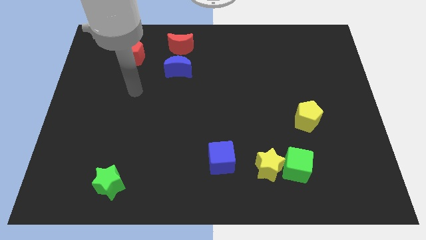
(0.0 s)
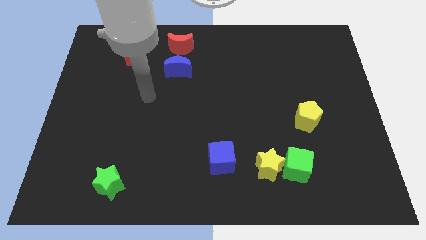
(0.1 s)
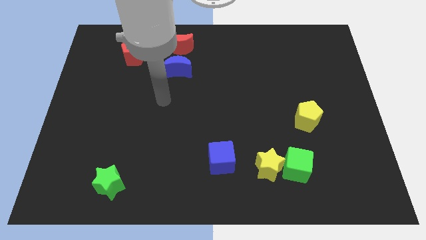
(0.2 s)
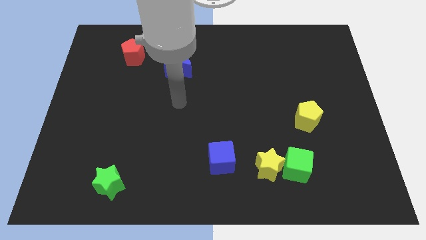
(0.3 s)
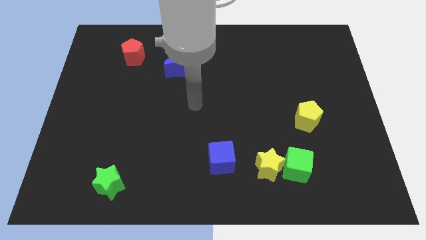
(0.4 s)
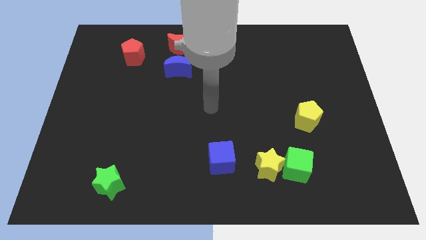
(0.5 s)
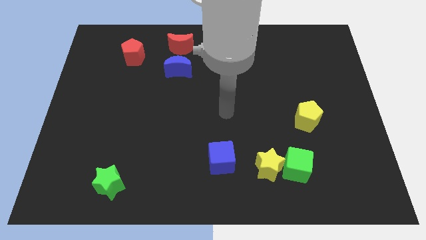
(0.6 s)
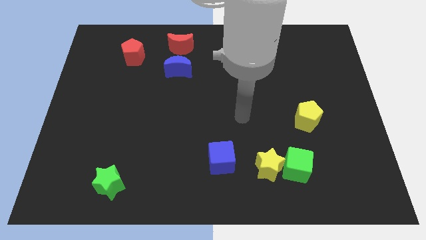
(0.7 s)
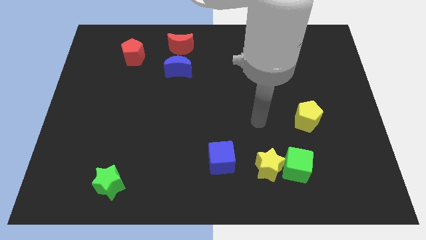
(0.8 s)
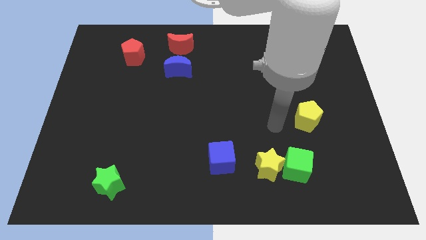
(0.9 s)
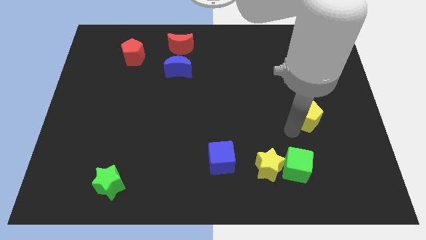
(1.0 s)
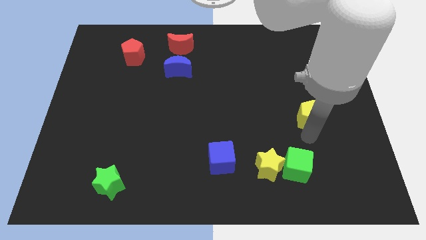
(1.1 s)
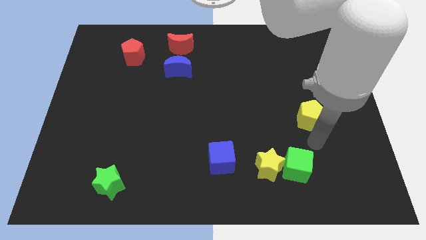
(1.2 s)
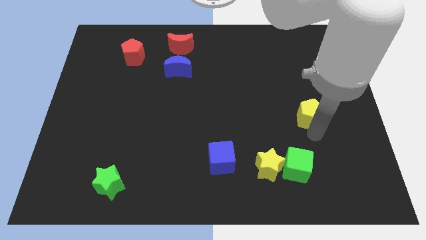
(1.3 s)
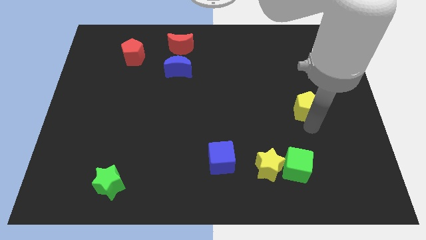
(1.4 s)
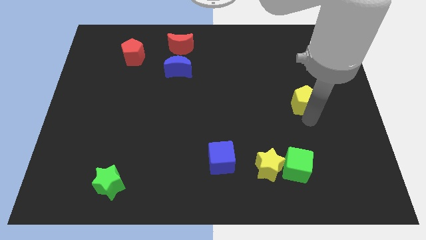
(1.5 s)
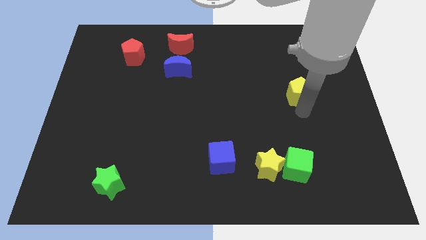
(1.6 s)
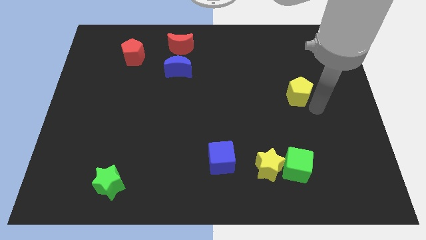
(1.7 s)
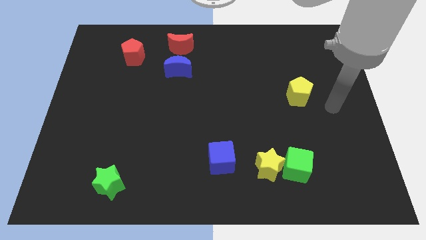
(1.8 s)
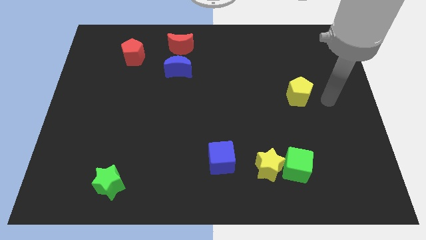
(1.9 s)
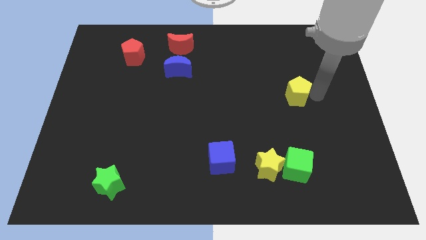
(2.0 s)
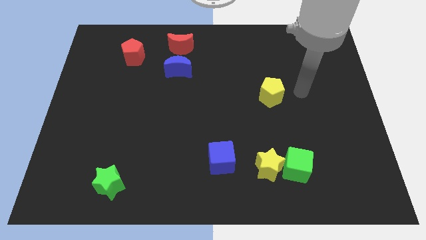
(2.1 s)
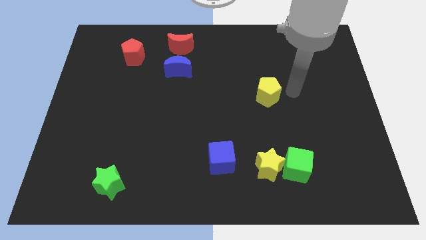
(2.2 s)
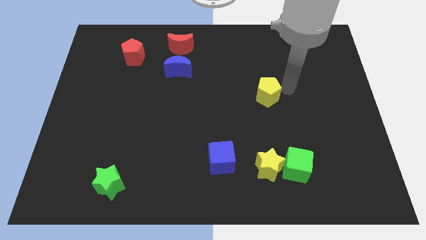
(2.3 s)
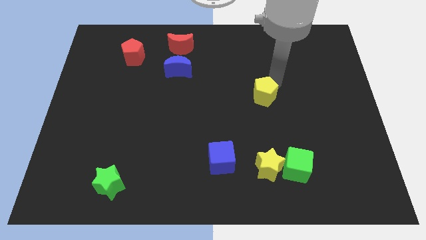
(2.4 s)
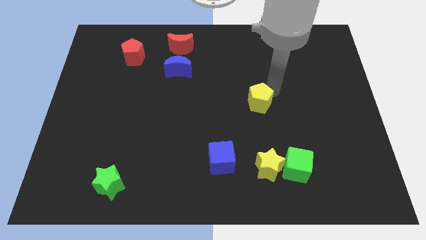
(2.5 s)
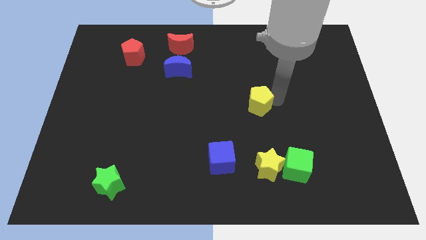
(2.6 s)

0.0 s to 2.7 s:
place the yellow pentagon above the yellow star

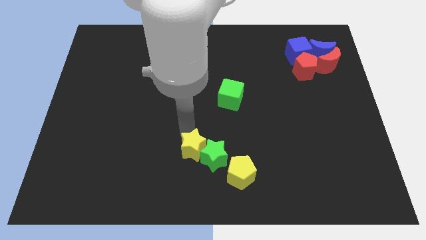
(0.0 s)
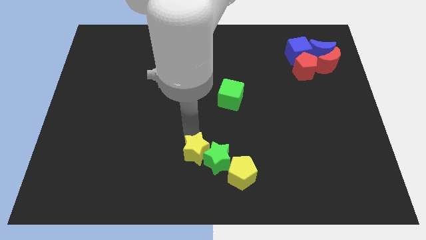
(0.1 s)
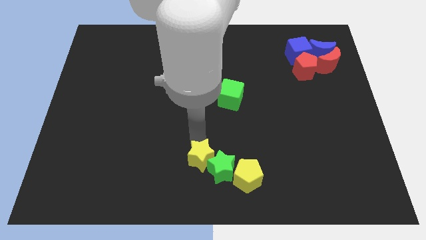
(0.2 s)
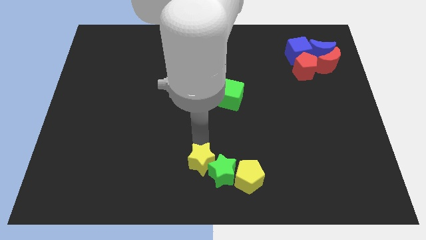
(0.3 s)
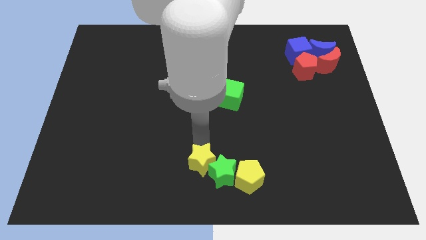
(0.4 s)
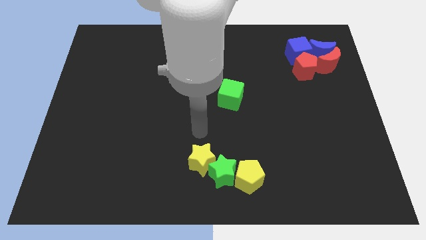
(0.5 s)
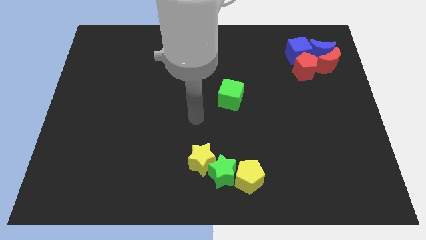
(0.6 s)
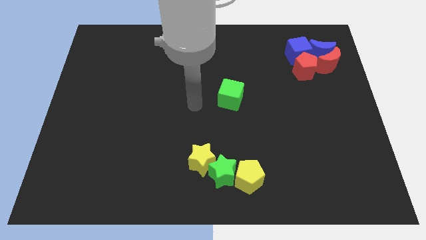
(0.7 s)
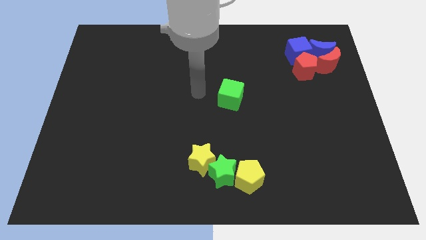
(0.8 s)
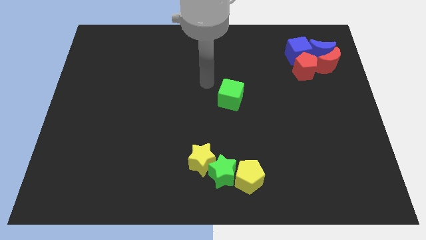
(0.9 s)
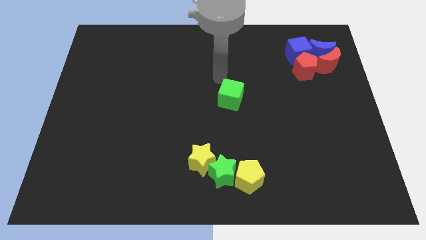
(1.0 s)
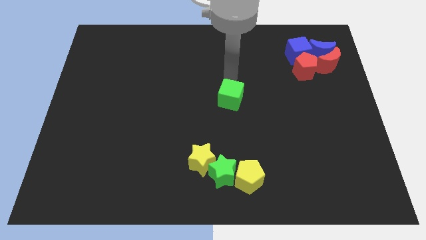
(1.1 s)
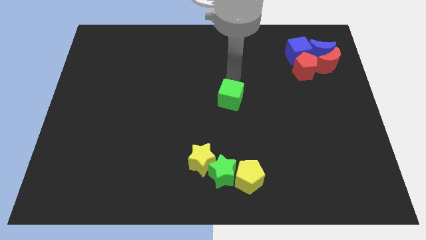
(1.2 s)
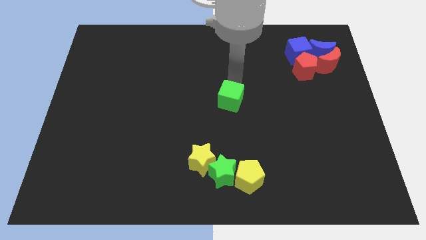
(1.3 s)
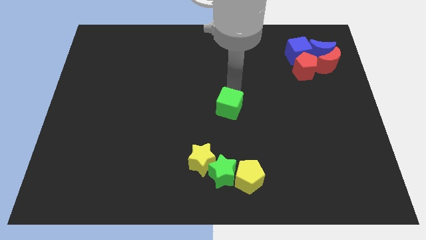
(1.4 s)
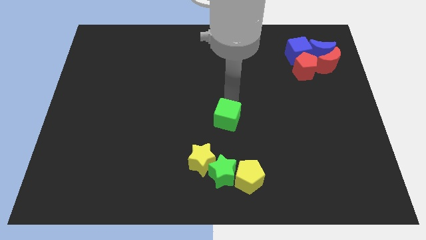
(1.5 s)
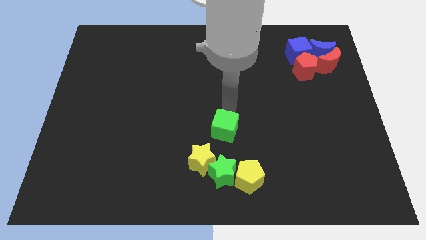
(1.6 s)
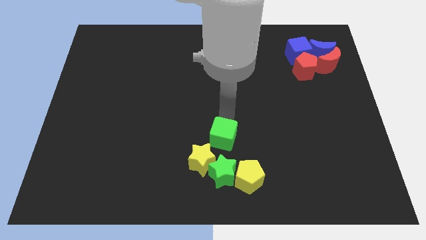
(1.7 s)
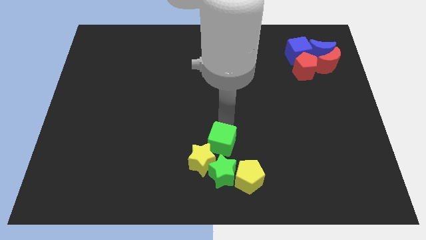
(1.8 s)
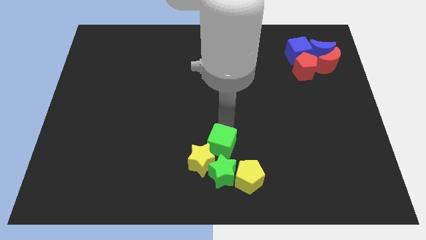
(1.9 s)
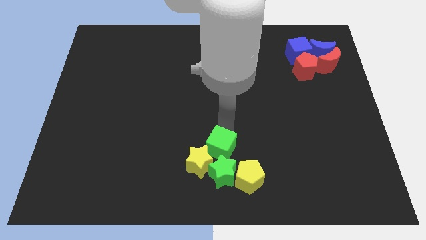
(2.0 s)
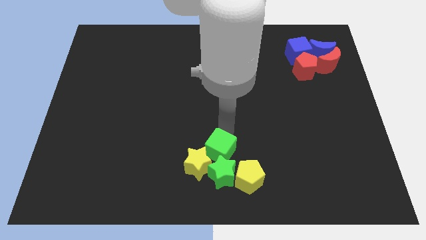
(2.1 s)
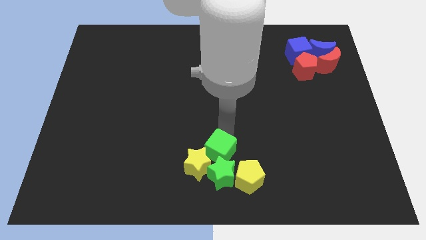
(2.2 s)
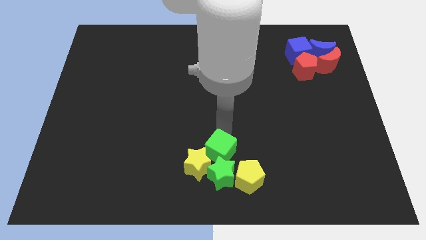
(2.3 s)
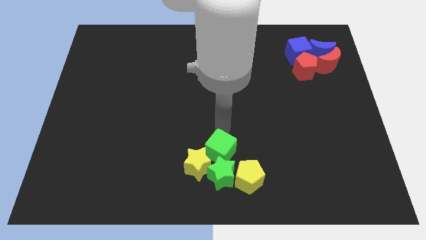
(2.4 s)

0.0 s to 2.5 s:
move the green cube into the green star

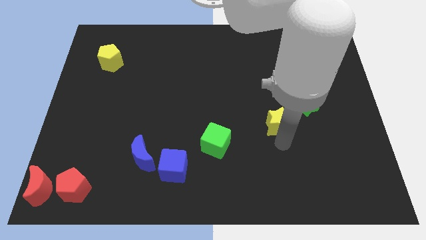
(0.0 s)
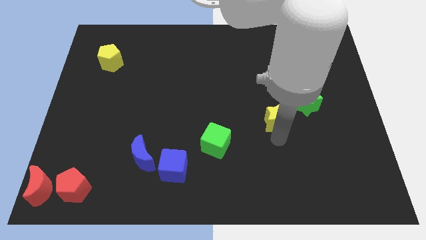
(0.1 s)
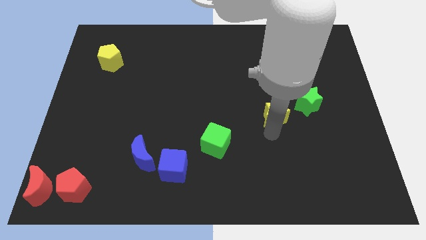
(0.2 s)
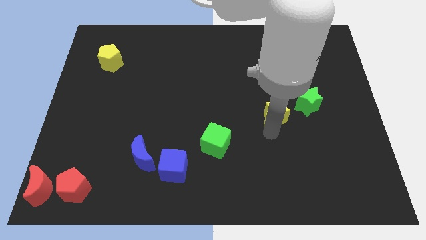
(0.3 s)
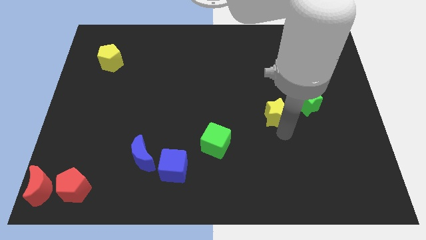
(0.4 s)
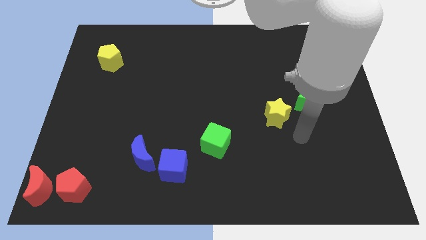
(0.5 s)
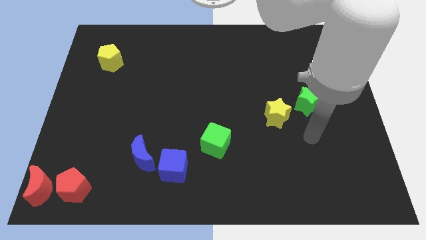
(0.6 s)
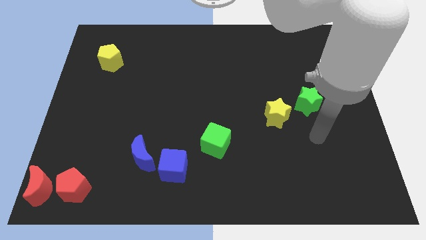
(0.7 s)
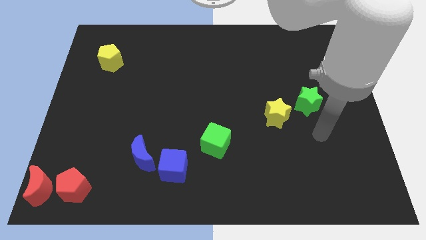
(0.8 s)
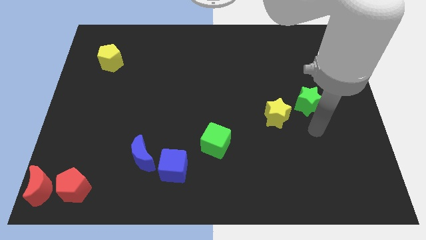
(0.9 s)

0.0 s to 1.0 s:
touch the bottom side of the yellow star

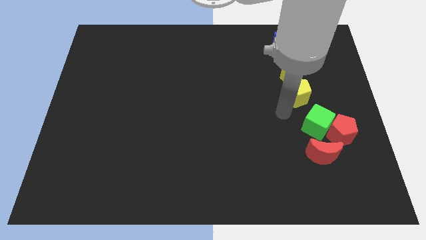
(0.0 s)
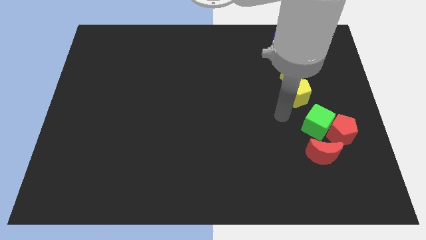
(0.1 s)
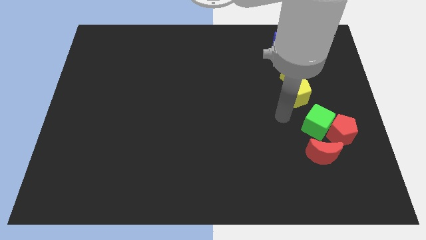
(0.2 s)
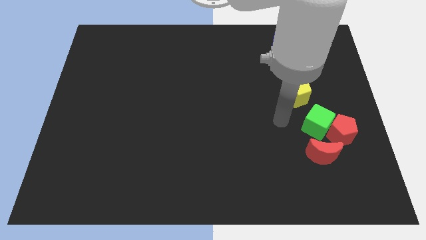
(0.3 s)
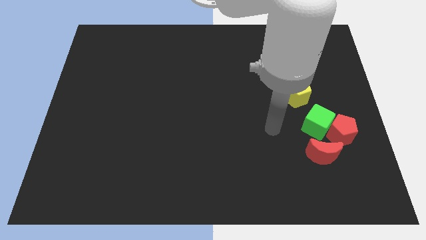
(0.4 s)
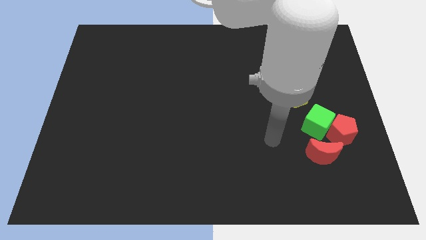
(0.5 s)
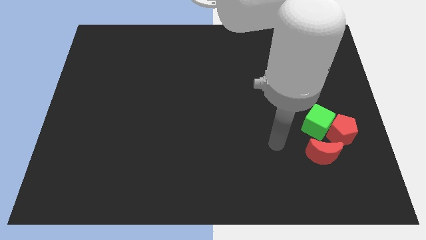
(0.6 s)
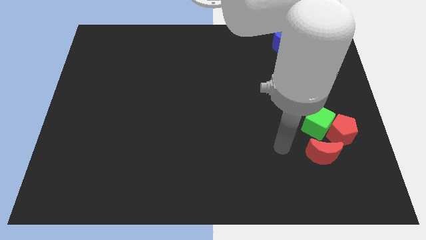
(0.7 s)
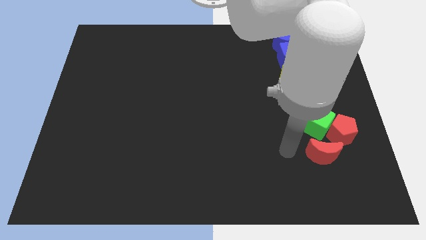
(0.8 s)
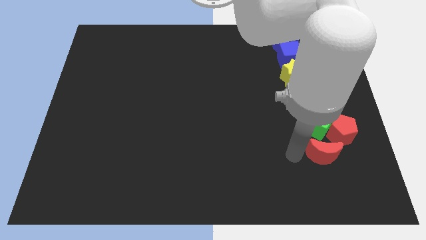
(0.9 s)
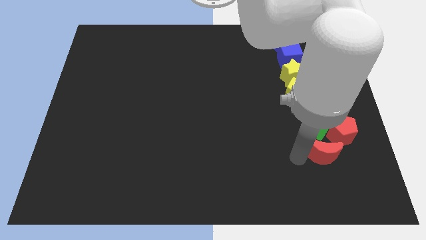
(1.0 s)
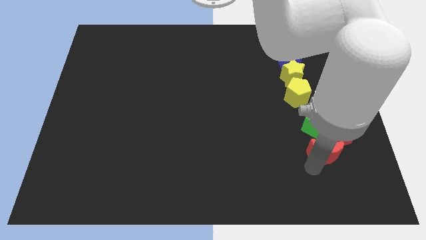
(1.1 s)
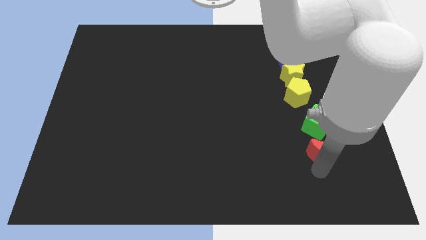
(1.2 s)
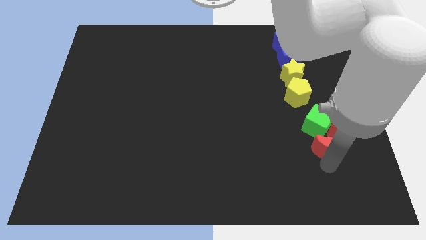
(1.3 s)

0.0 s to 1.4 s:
push the red moon into the red pentagon

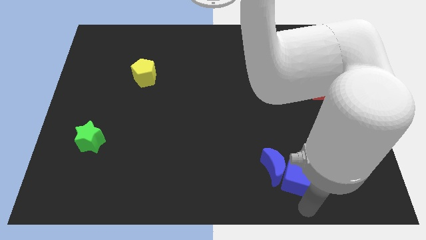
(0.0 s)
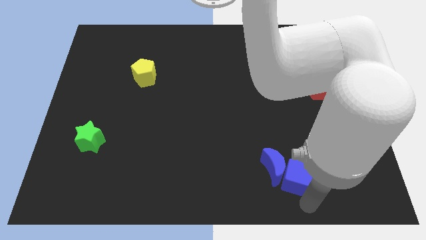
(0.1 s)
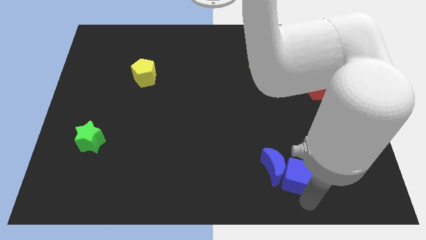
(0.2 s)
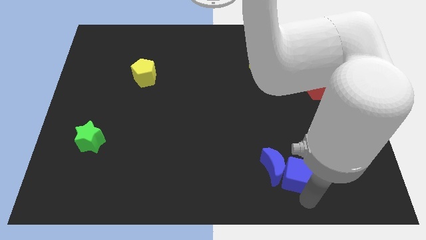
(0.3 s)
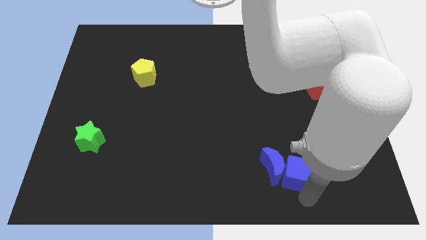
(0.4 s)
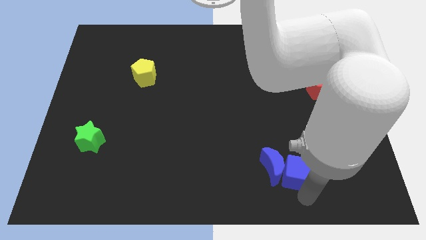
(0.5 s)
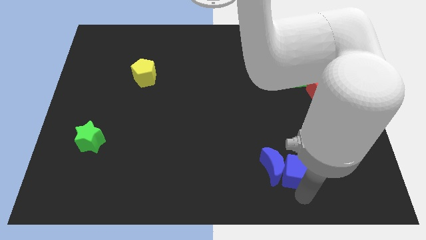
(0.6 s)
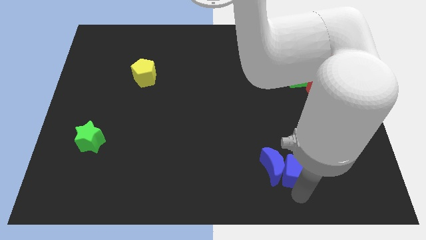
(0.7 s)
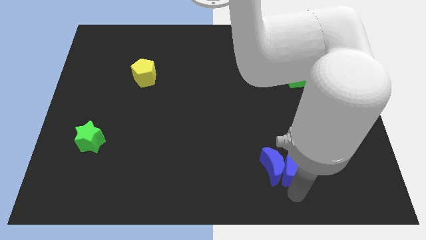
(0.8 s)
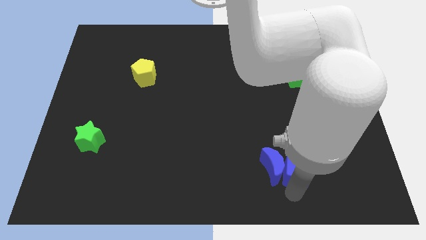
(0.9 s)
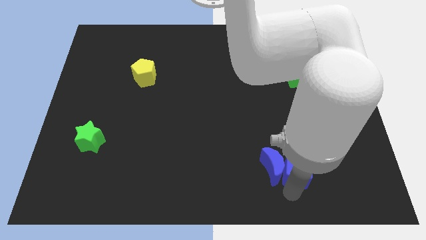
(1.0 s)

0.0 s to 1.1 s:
tap the bottom side of the blue cube

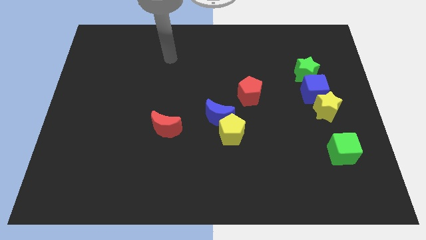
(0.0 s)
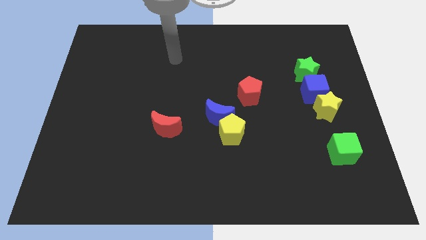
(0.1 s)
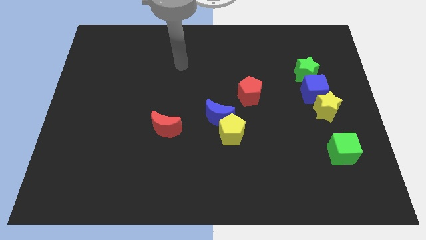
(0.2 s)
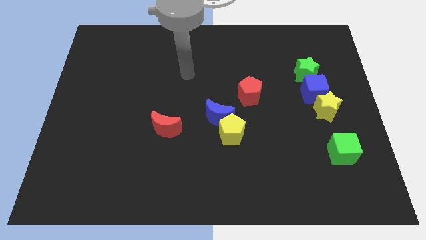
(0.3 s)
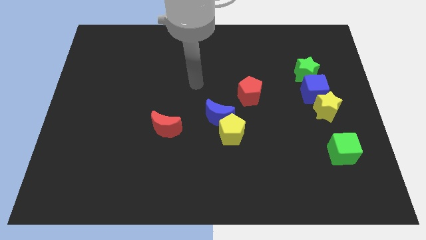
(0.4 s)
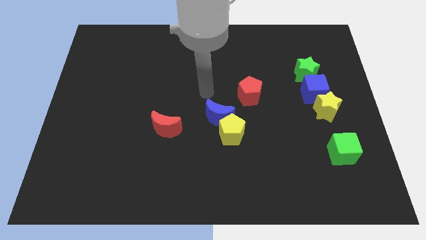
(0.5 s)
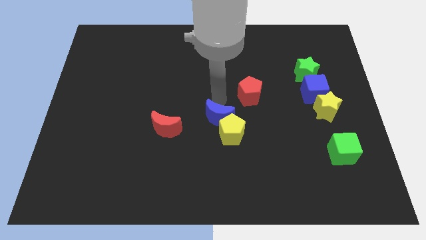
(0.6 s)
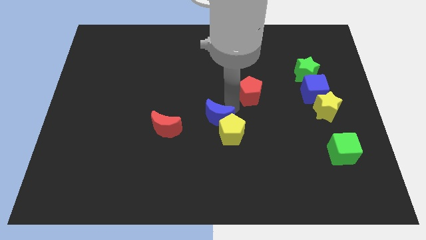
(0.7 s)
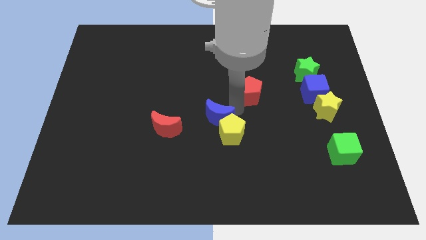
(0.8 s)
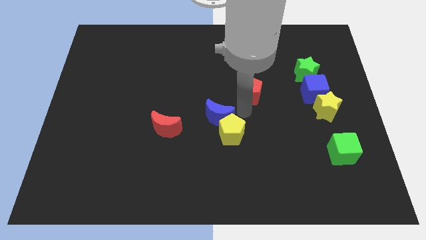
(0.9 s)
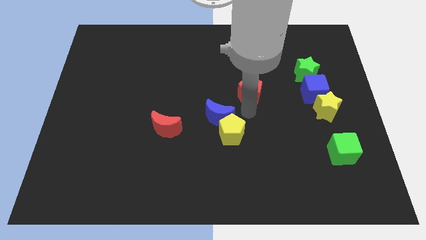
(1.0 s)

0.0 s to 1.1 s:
point your arm at the bottom of the red pentagon
